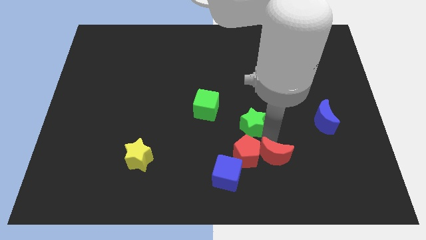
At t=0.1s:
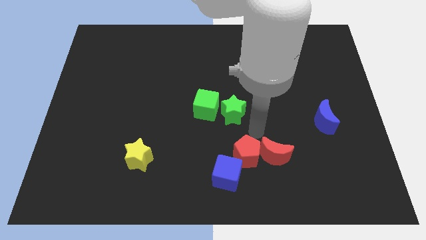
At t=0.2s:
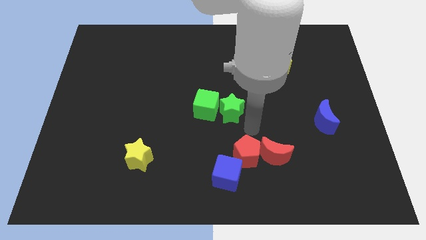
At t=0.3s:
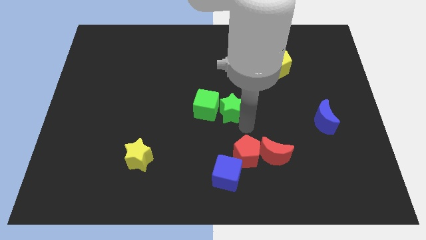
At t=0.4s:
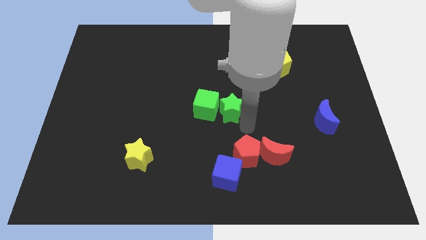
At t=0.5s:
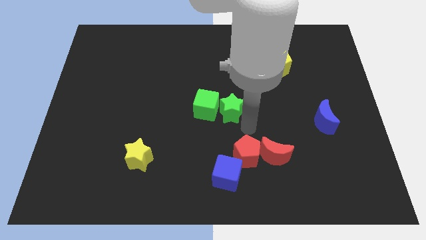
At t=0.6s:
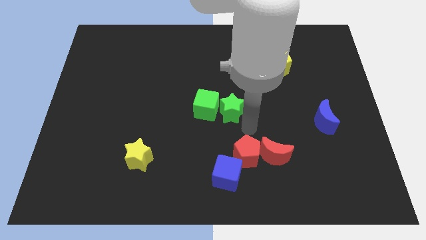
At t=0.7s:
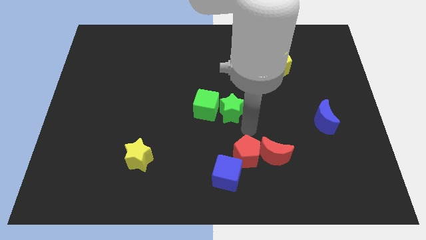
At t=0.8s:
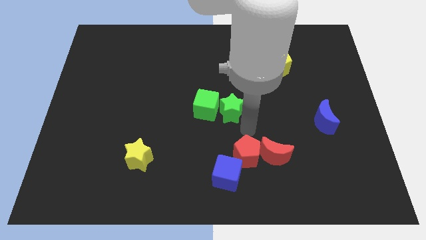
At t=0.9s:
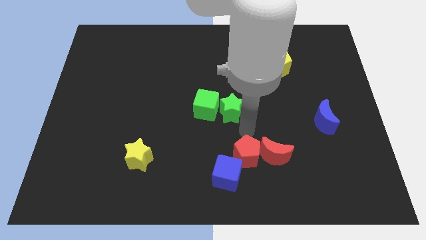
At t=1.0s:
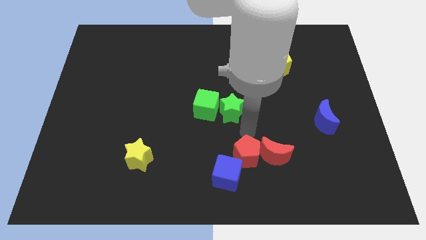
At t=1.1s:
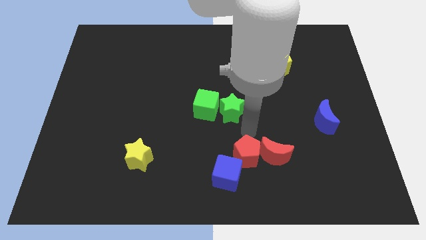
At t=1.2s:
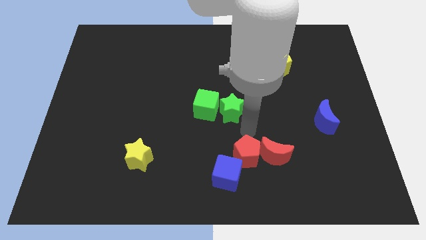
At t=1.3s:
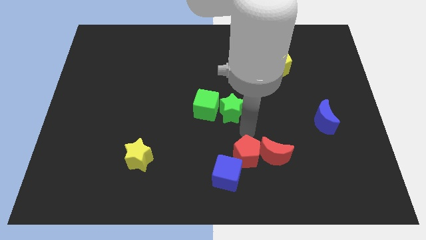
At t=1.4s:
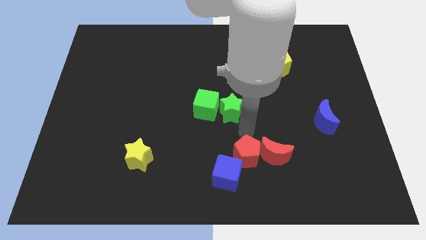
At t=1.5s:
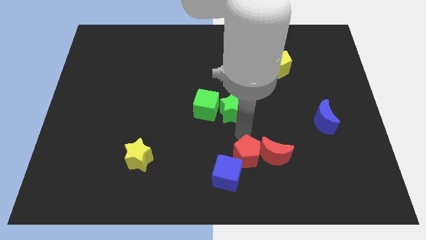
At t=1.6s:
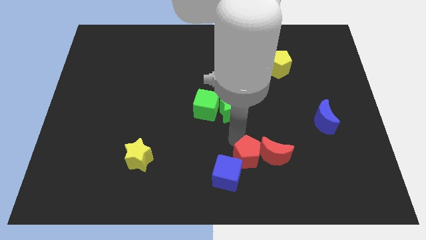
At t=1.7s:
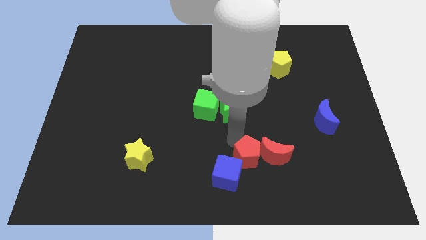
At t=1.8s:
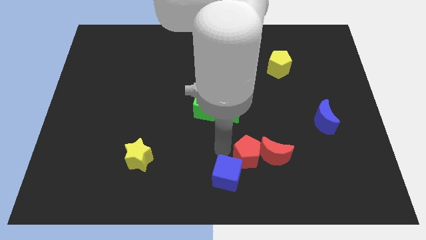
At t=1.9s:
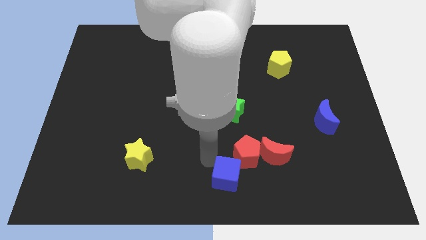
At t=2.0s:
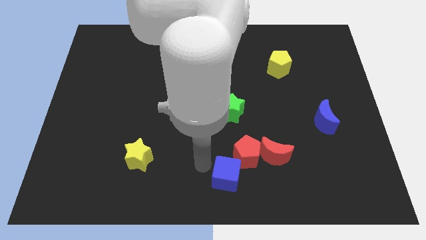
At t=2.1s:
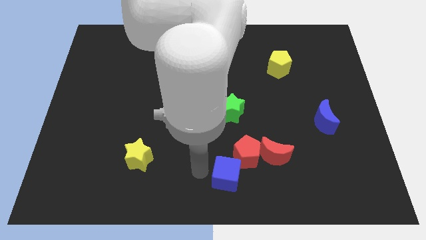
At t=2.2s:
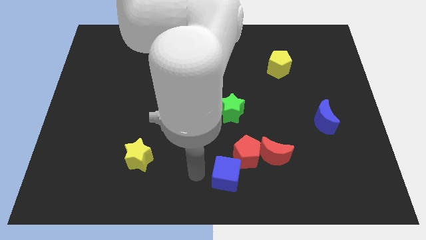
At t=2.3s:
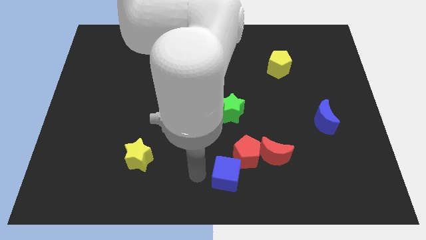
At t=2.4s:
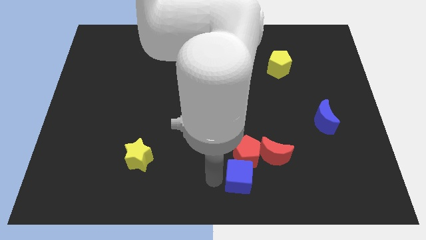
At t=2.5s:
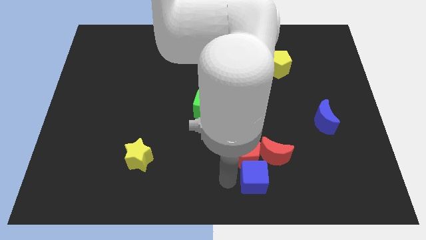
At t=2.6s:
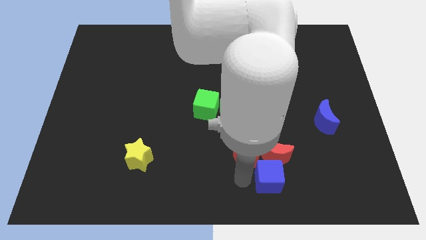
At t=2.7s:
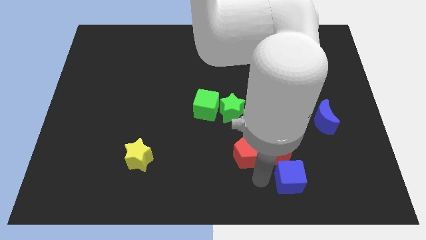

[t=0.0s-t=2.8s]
push blue cube below red crescent

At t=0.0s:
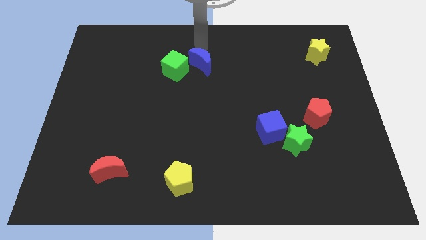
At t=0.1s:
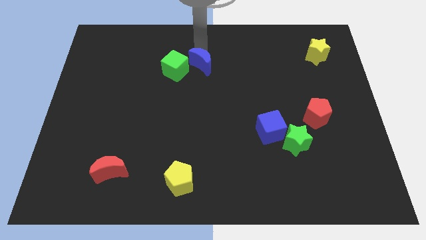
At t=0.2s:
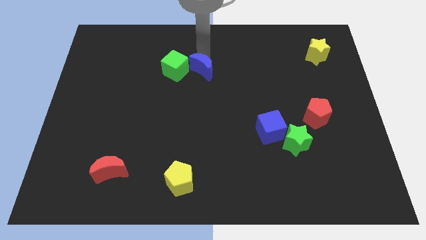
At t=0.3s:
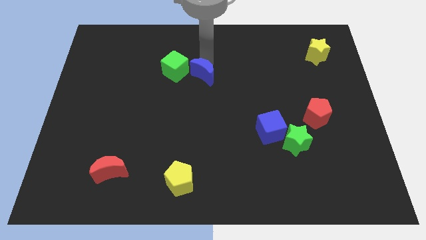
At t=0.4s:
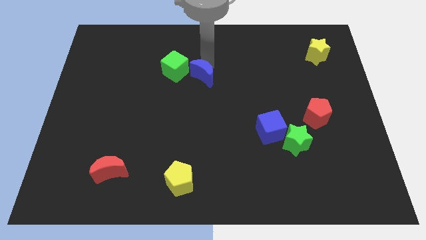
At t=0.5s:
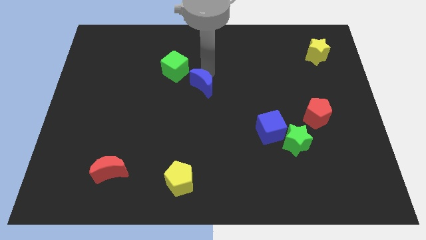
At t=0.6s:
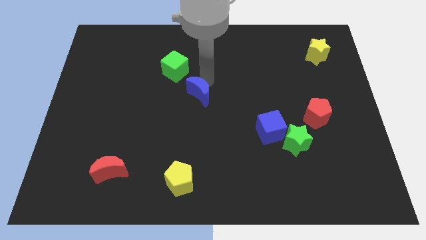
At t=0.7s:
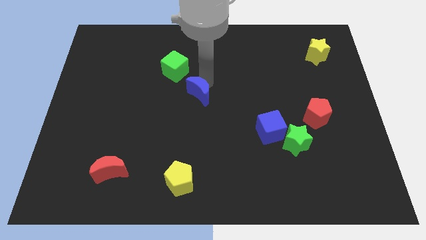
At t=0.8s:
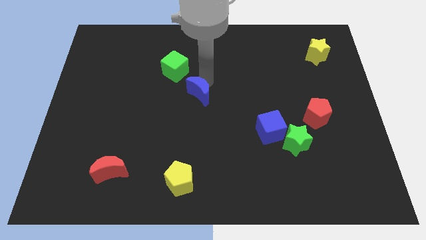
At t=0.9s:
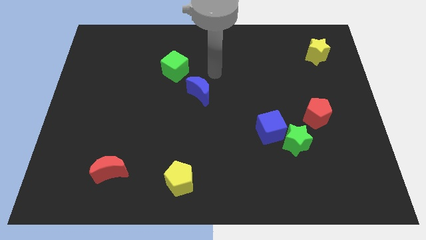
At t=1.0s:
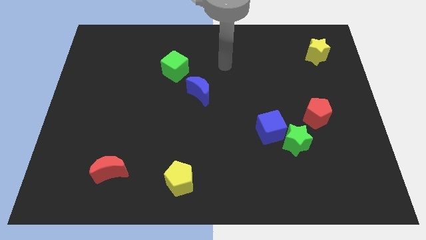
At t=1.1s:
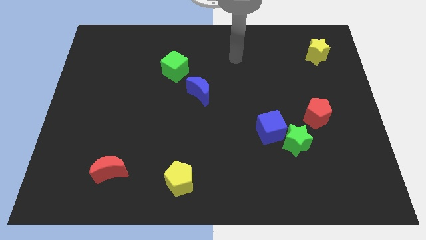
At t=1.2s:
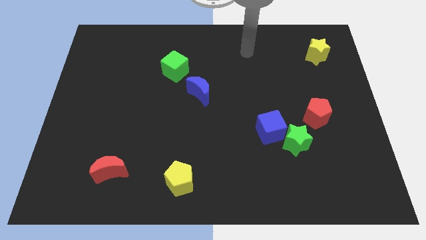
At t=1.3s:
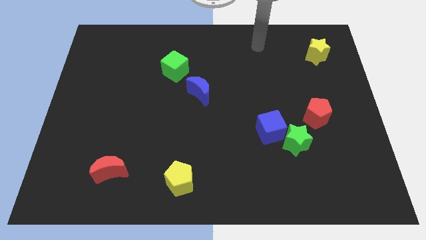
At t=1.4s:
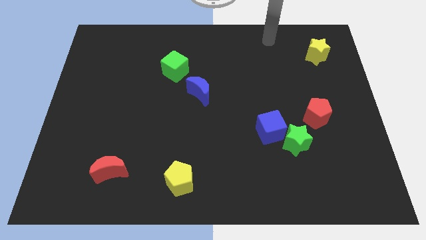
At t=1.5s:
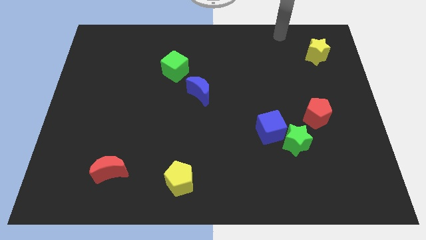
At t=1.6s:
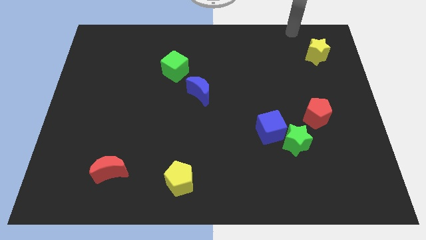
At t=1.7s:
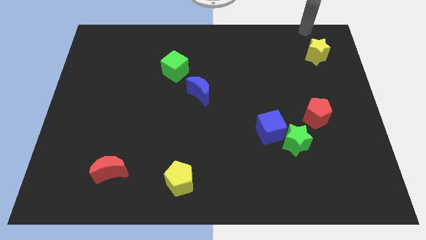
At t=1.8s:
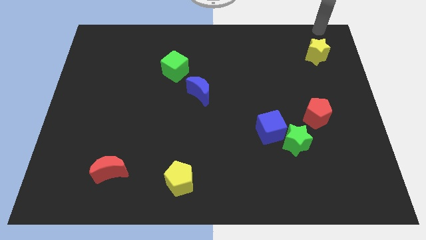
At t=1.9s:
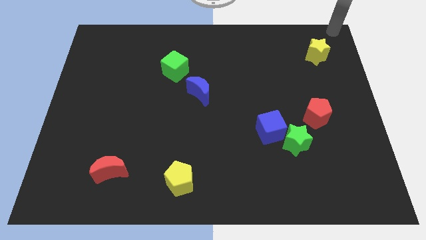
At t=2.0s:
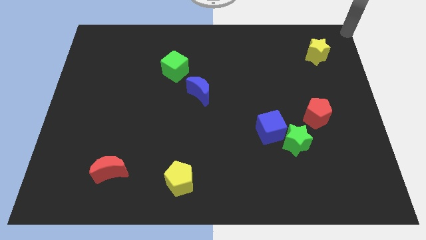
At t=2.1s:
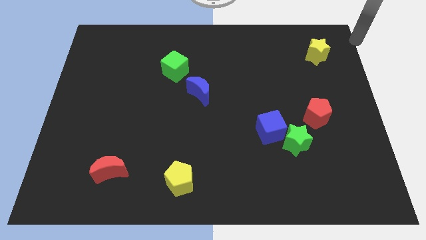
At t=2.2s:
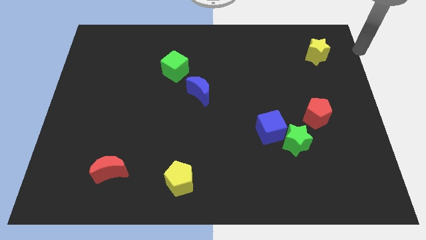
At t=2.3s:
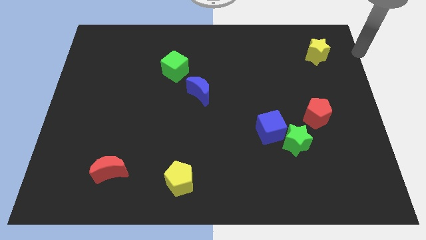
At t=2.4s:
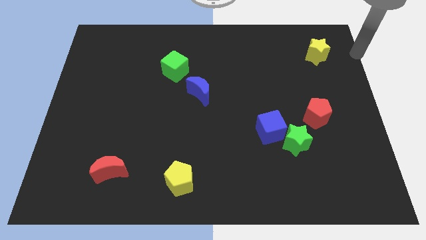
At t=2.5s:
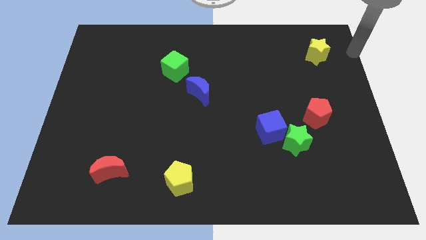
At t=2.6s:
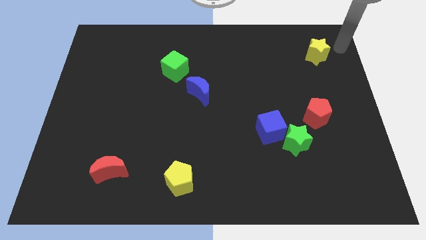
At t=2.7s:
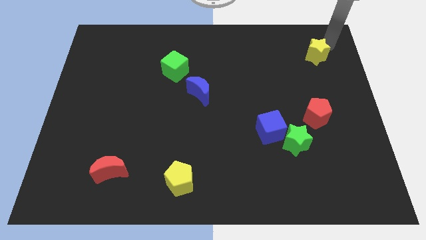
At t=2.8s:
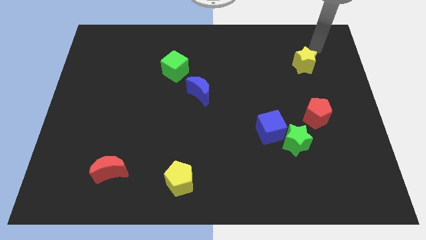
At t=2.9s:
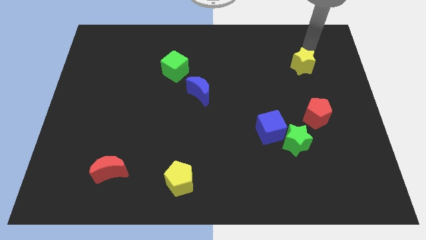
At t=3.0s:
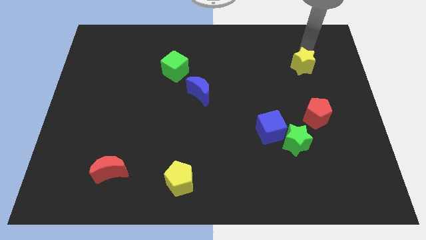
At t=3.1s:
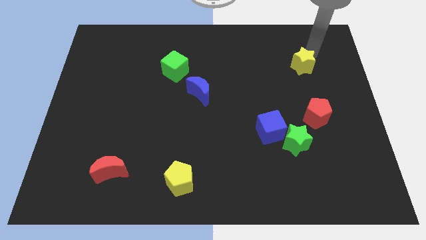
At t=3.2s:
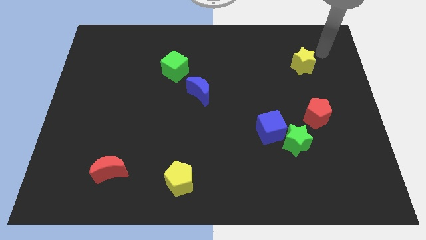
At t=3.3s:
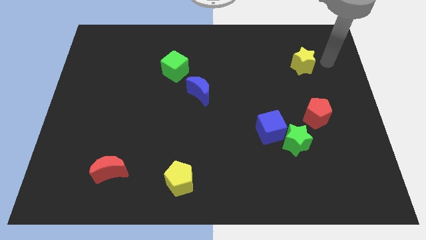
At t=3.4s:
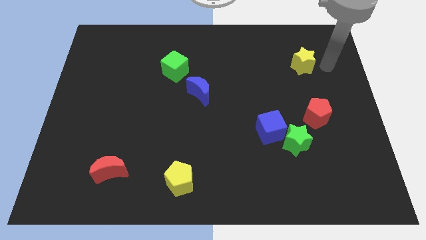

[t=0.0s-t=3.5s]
move the yellow star slightly to the left

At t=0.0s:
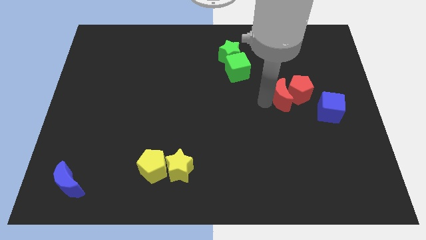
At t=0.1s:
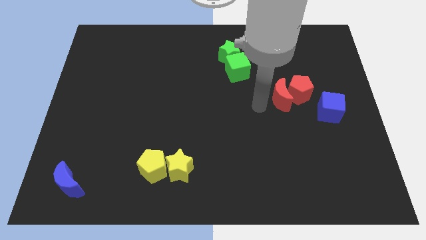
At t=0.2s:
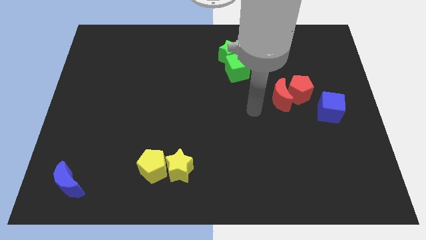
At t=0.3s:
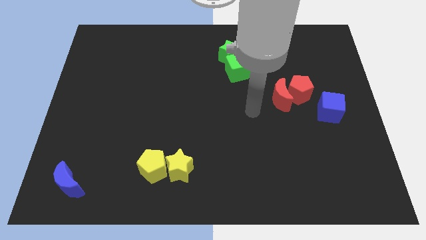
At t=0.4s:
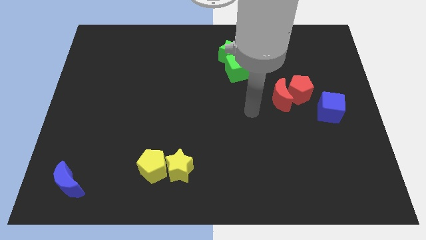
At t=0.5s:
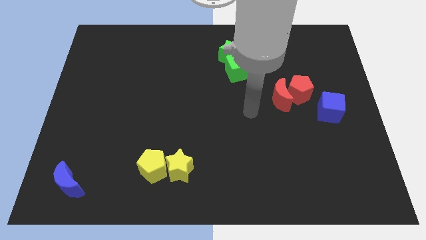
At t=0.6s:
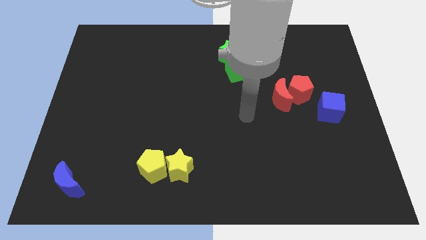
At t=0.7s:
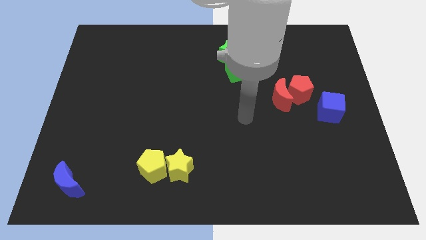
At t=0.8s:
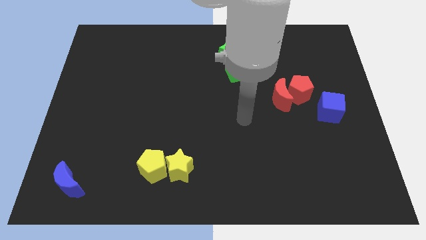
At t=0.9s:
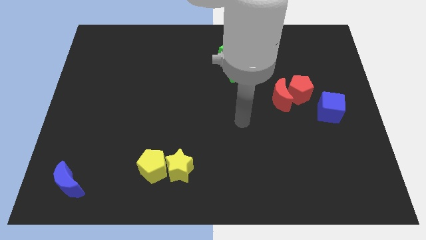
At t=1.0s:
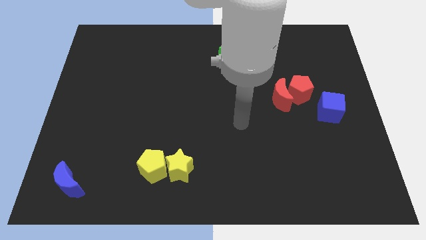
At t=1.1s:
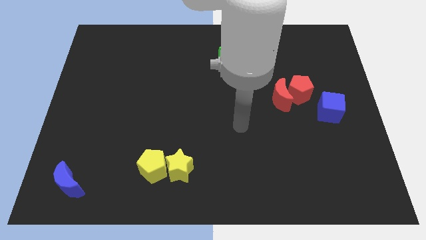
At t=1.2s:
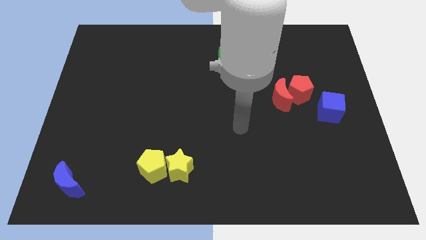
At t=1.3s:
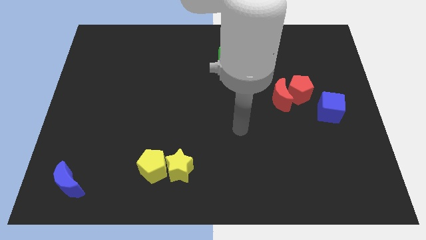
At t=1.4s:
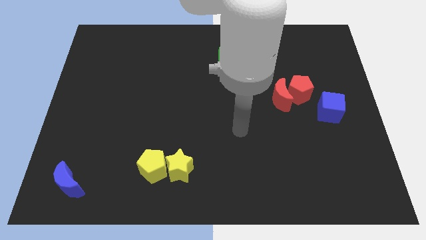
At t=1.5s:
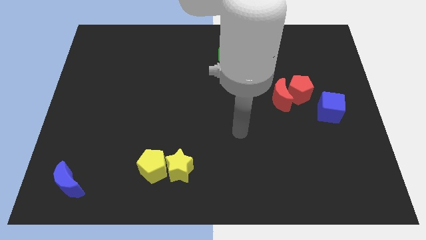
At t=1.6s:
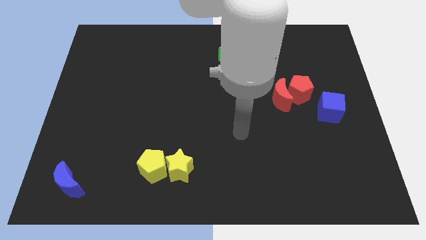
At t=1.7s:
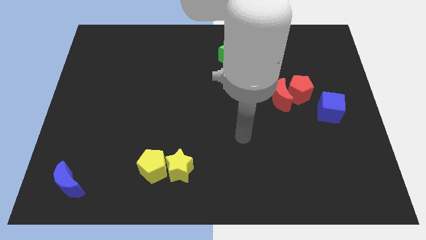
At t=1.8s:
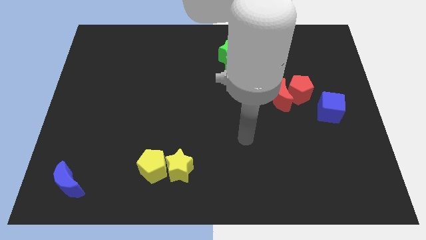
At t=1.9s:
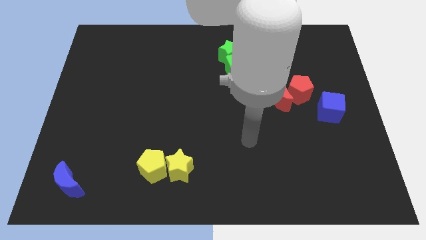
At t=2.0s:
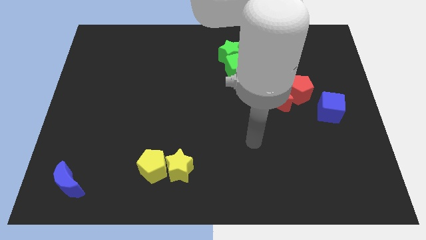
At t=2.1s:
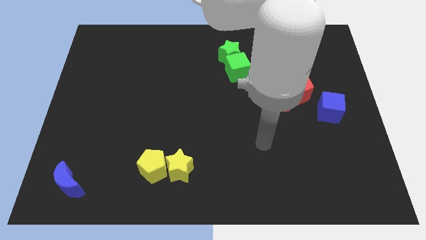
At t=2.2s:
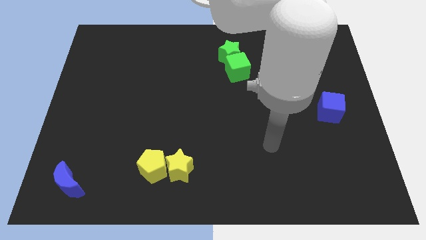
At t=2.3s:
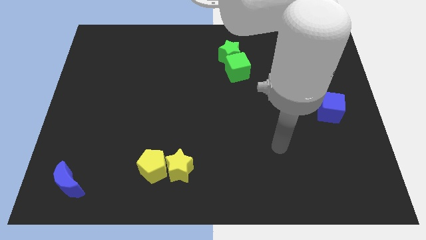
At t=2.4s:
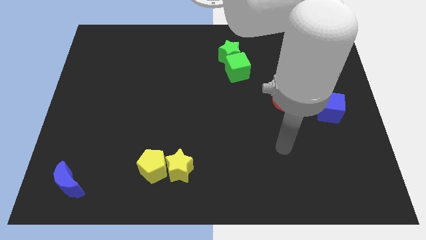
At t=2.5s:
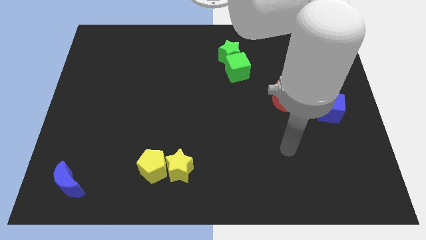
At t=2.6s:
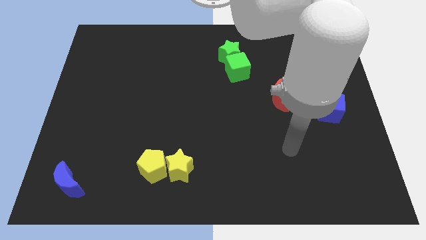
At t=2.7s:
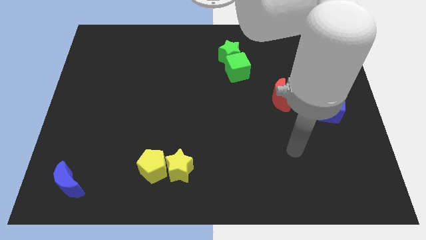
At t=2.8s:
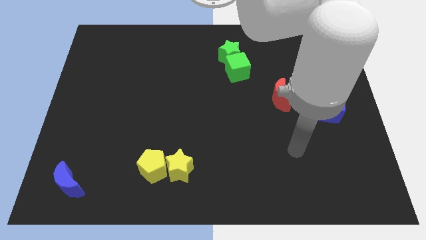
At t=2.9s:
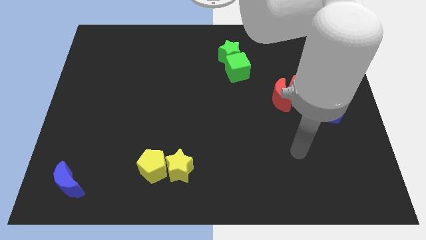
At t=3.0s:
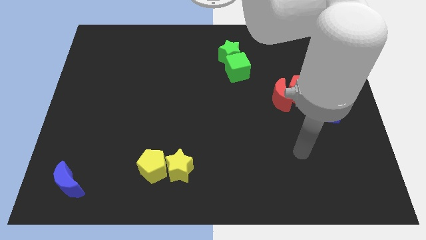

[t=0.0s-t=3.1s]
point your hand below the group of red blocks
